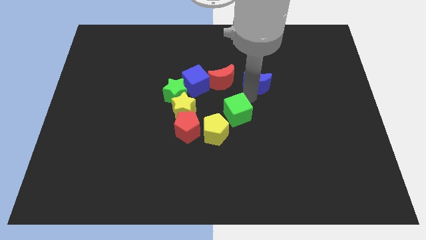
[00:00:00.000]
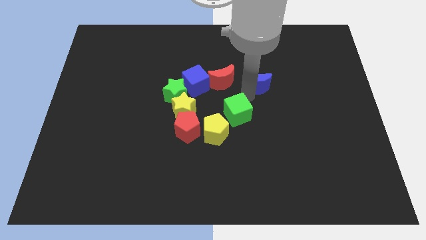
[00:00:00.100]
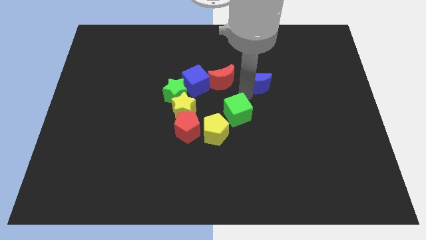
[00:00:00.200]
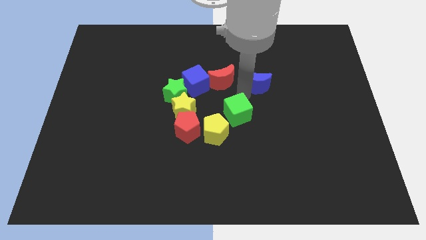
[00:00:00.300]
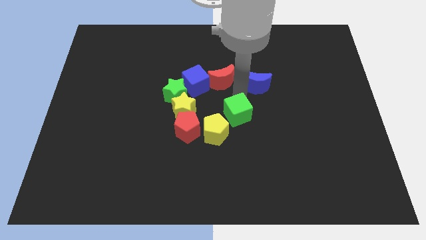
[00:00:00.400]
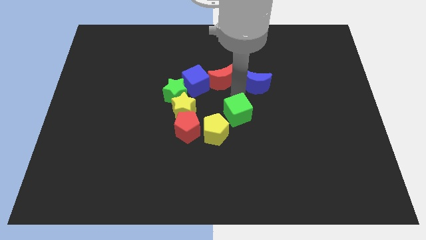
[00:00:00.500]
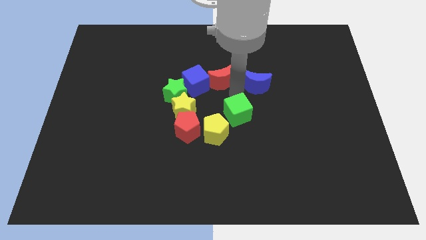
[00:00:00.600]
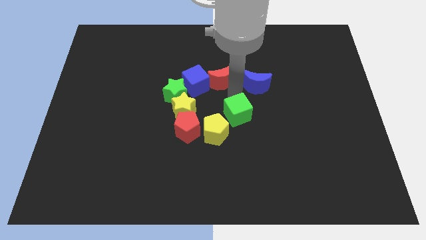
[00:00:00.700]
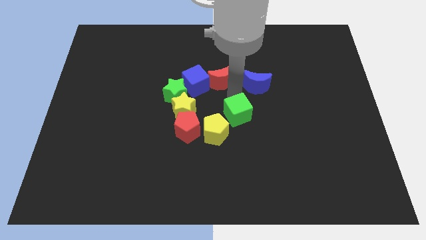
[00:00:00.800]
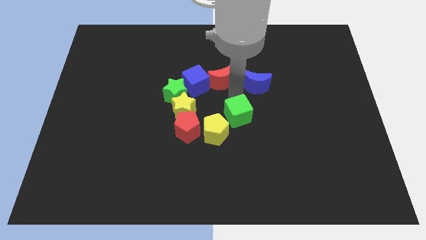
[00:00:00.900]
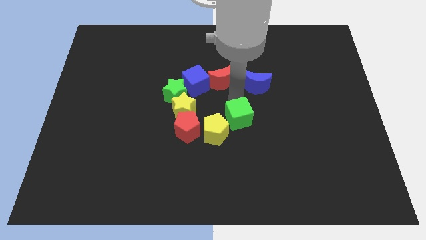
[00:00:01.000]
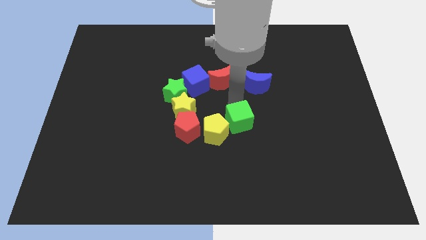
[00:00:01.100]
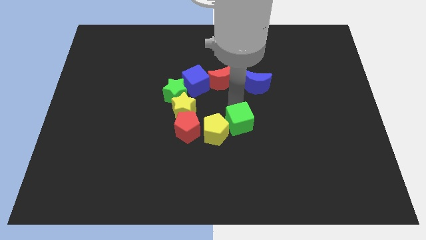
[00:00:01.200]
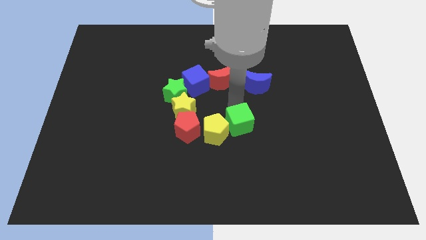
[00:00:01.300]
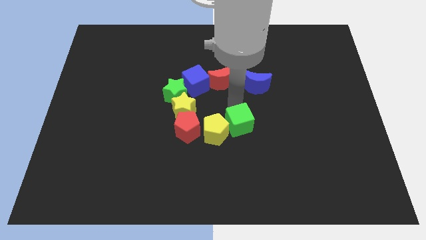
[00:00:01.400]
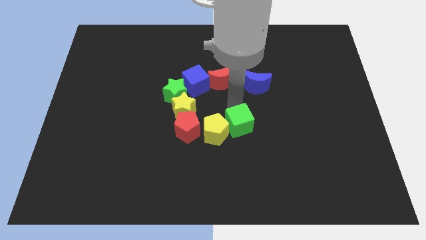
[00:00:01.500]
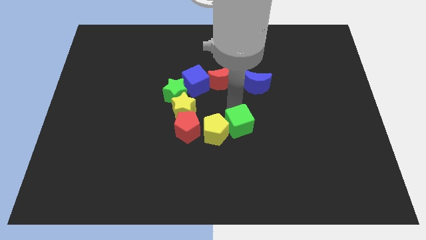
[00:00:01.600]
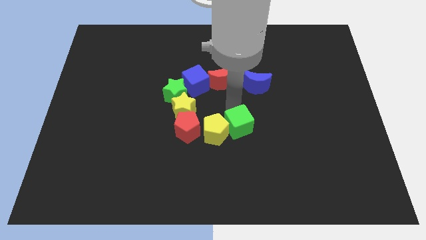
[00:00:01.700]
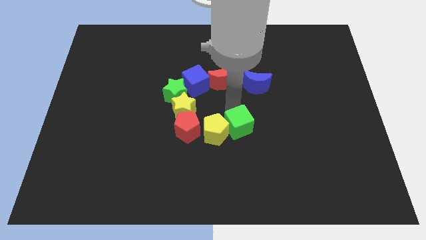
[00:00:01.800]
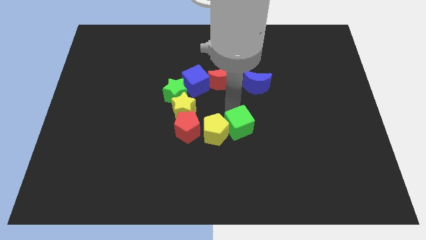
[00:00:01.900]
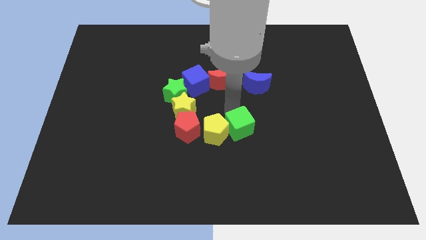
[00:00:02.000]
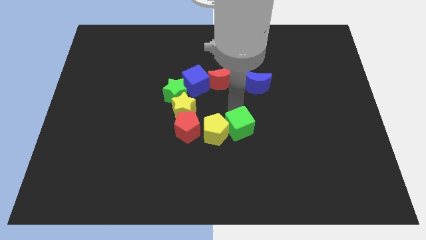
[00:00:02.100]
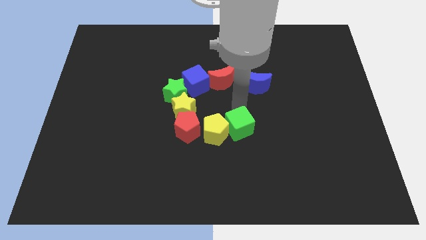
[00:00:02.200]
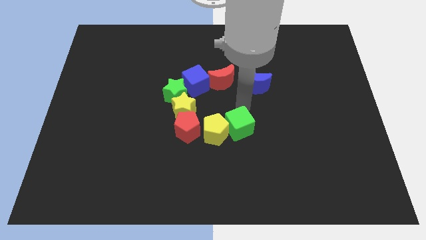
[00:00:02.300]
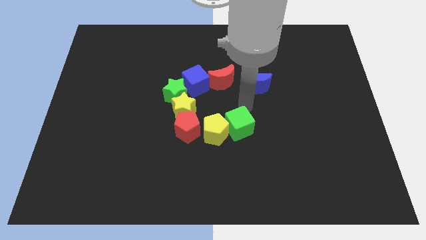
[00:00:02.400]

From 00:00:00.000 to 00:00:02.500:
push green cube downward

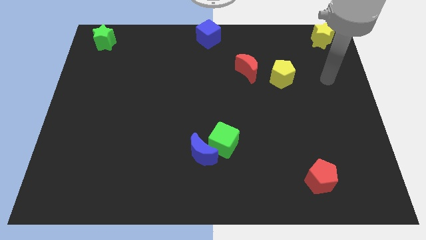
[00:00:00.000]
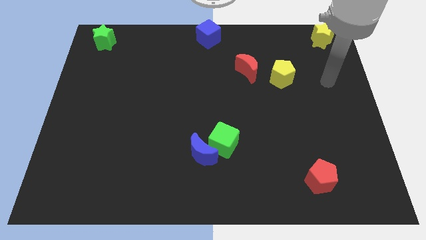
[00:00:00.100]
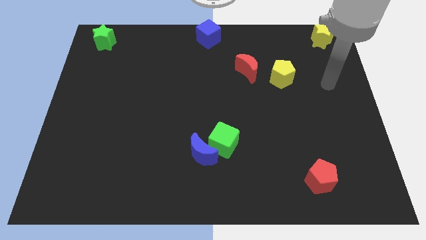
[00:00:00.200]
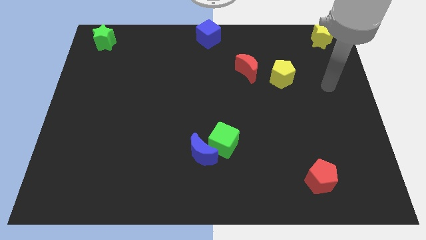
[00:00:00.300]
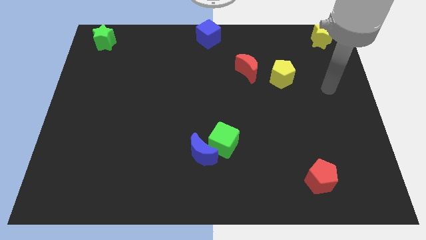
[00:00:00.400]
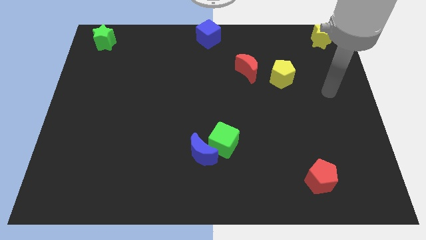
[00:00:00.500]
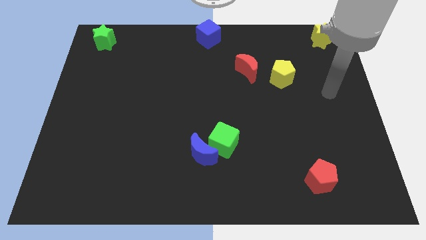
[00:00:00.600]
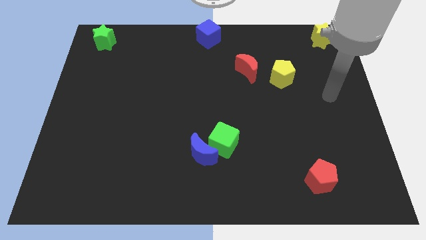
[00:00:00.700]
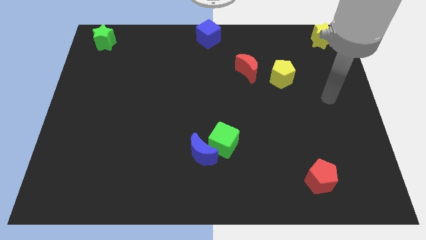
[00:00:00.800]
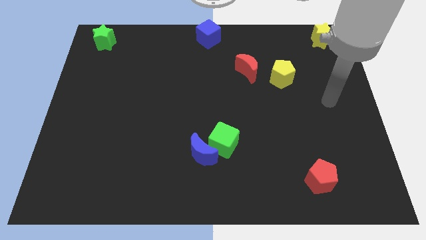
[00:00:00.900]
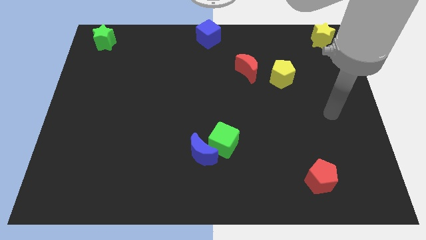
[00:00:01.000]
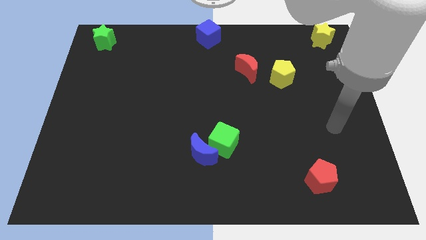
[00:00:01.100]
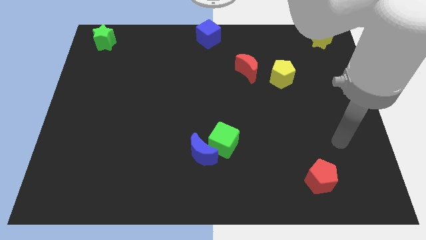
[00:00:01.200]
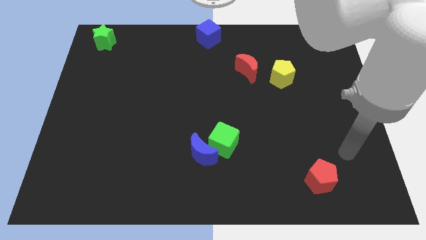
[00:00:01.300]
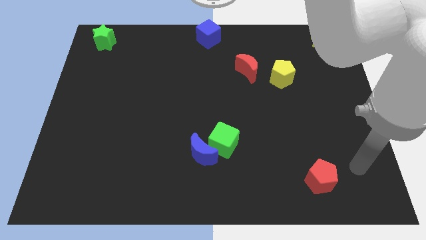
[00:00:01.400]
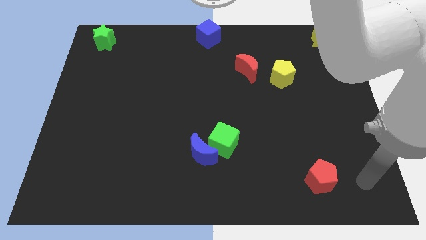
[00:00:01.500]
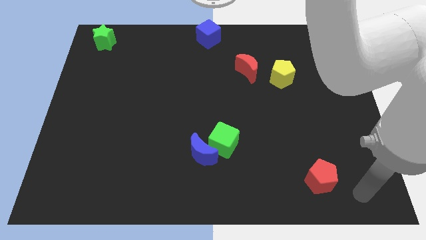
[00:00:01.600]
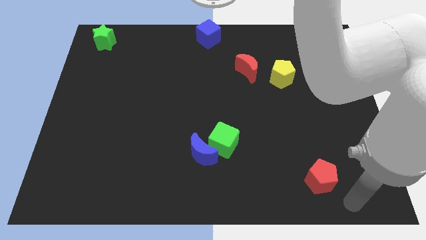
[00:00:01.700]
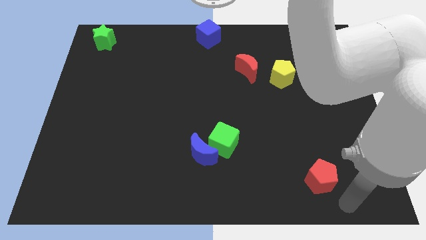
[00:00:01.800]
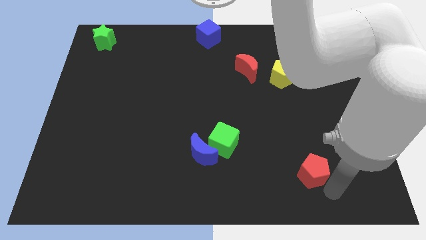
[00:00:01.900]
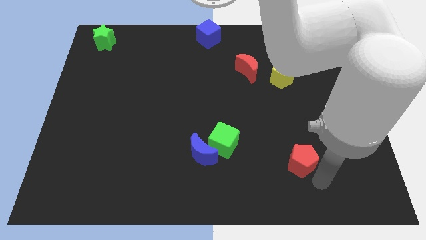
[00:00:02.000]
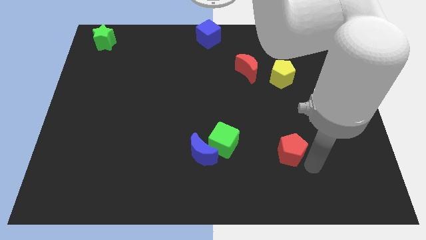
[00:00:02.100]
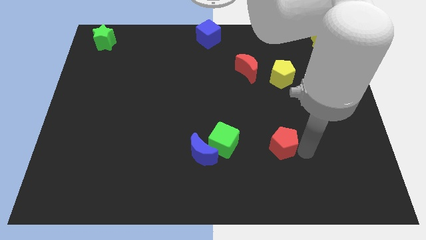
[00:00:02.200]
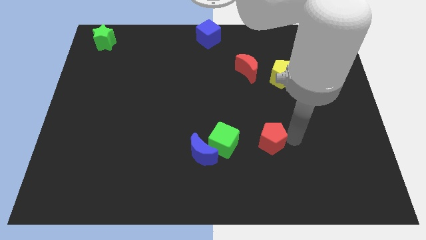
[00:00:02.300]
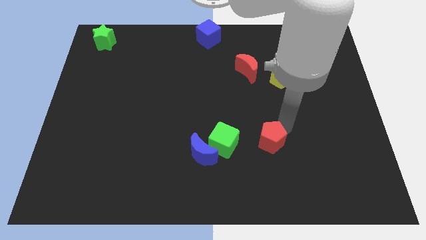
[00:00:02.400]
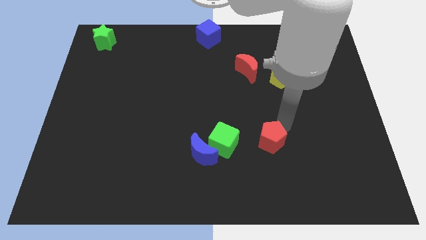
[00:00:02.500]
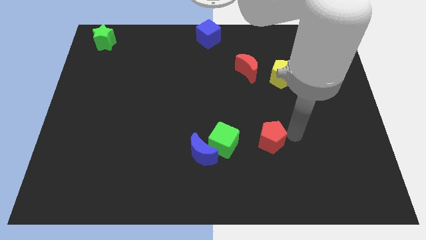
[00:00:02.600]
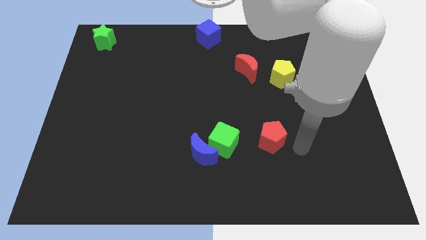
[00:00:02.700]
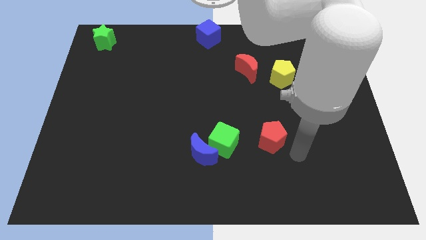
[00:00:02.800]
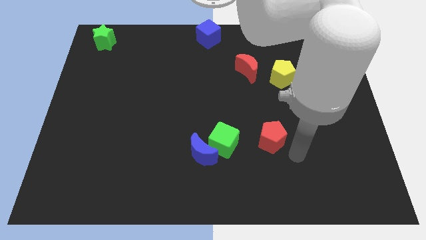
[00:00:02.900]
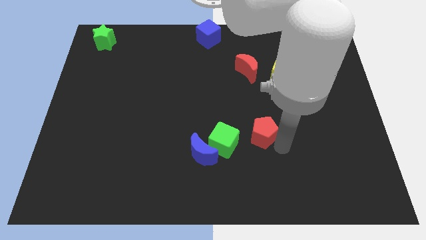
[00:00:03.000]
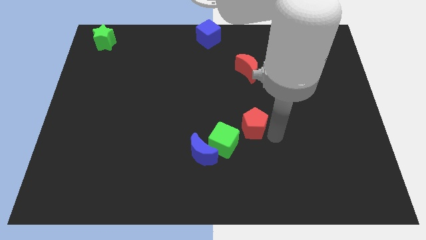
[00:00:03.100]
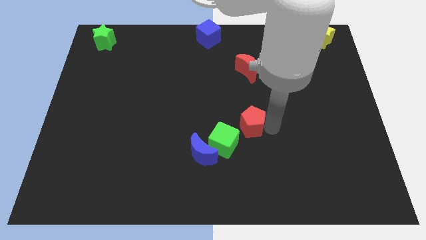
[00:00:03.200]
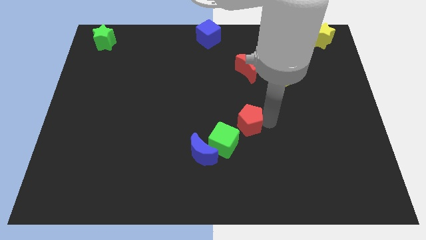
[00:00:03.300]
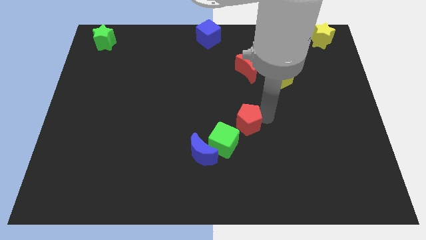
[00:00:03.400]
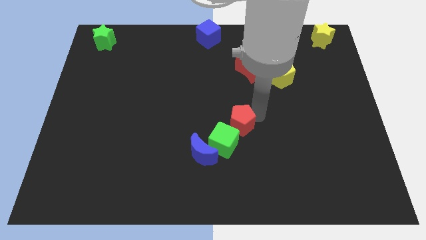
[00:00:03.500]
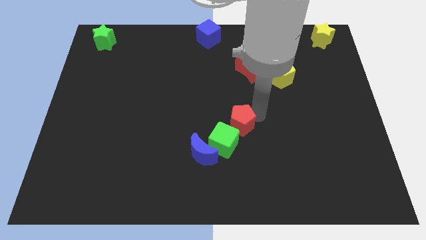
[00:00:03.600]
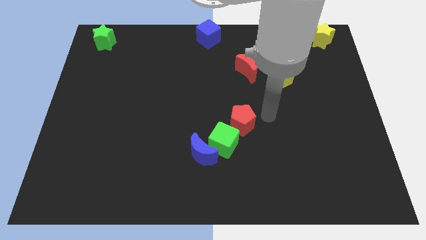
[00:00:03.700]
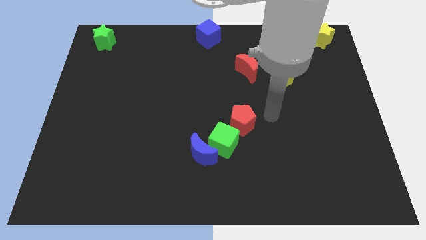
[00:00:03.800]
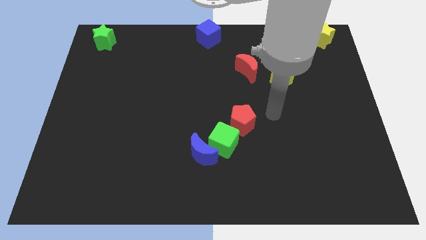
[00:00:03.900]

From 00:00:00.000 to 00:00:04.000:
put the red pentagon in between green cube and yellow pentagon

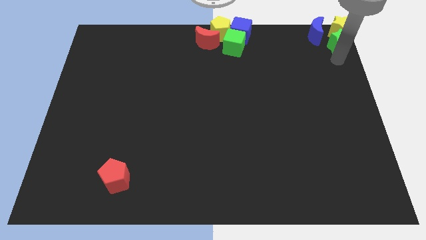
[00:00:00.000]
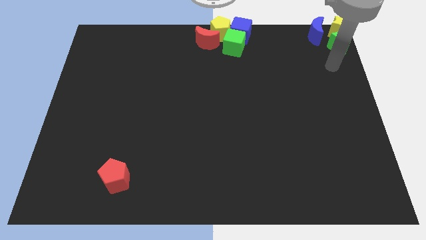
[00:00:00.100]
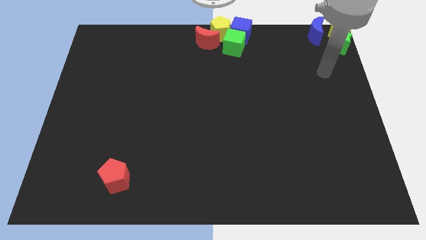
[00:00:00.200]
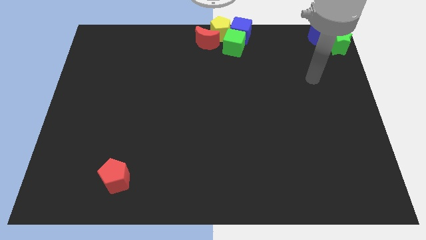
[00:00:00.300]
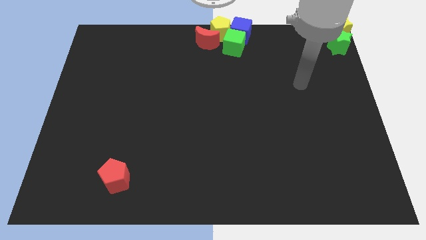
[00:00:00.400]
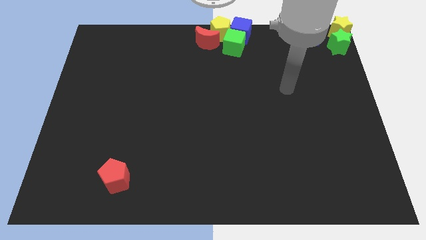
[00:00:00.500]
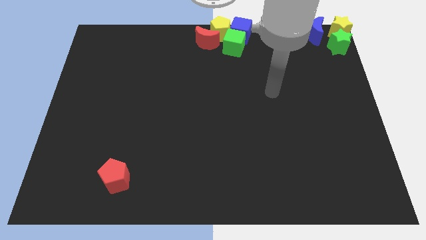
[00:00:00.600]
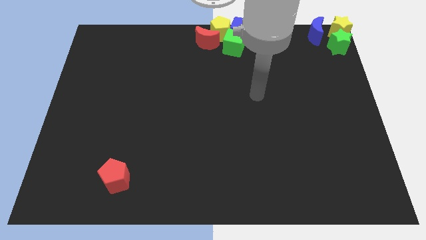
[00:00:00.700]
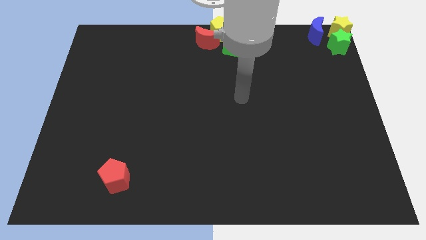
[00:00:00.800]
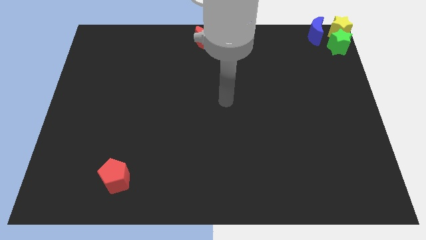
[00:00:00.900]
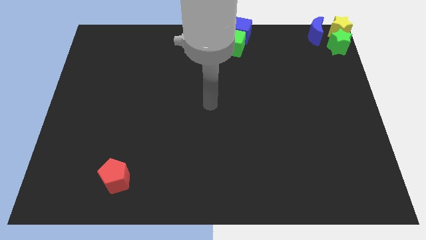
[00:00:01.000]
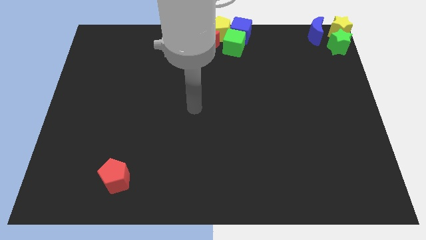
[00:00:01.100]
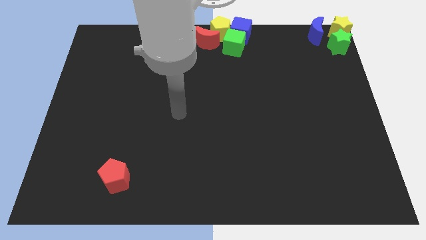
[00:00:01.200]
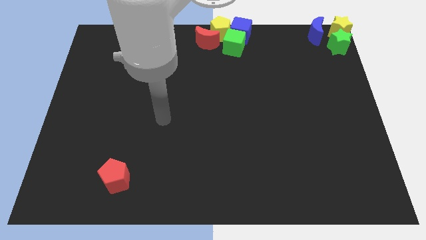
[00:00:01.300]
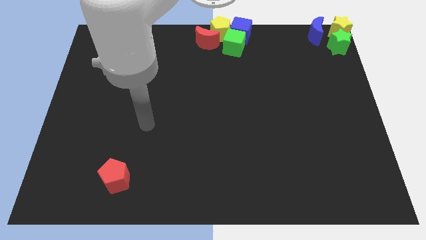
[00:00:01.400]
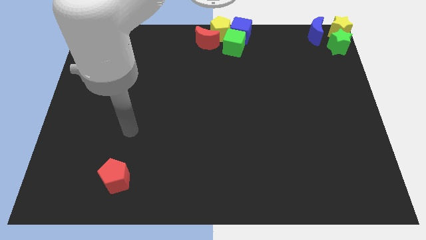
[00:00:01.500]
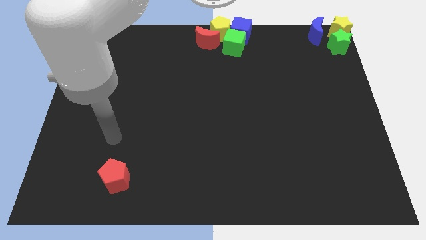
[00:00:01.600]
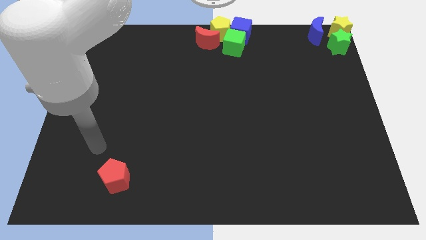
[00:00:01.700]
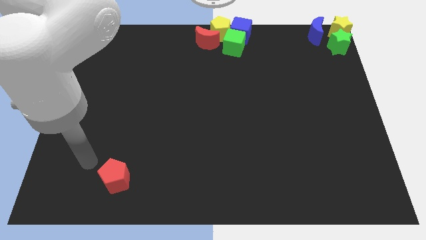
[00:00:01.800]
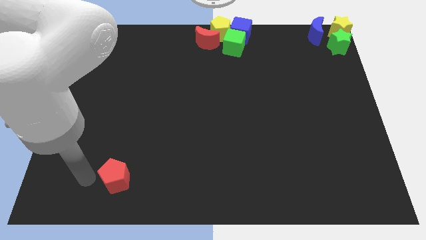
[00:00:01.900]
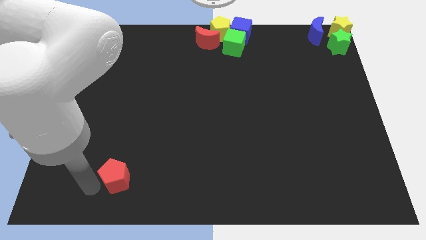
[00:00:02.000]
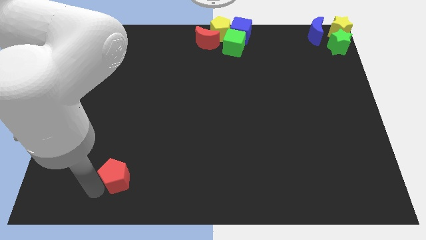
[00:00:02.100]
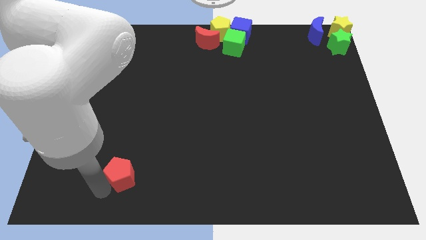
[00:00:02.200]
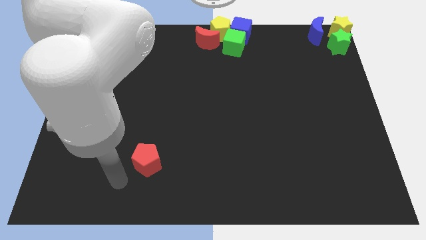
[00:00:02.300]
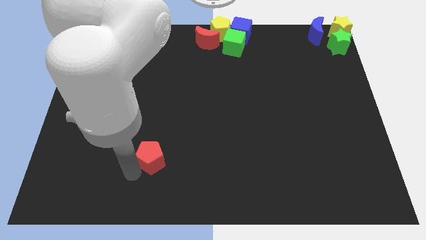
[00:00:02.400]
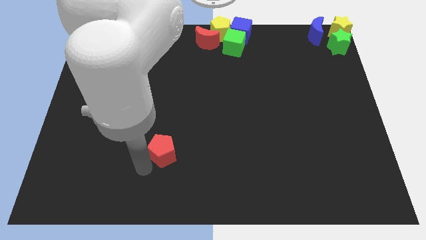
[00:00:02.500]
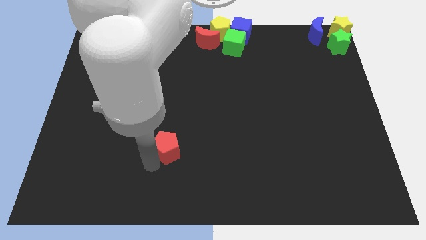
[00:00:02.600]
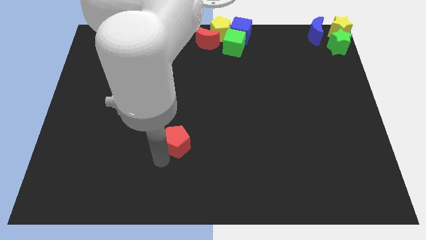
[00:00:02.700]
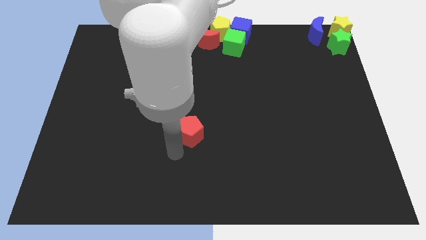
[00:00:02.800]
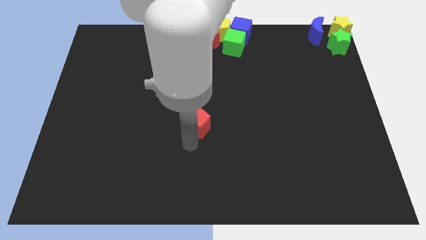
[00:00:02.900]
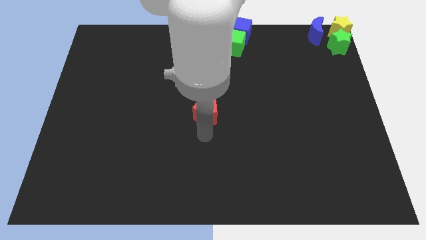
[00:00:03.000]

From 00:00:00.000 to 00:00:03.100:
slide the red pentagon vertically below the red moon
